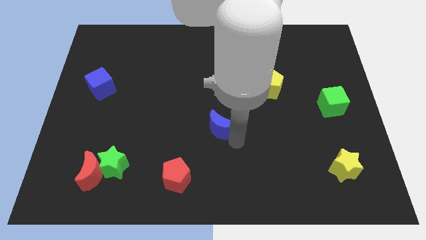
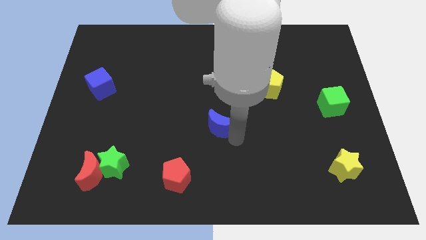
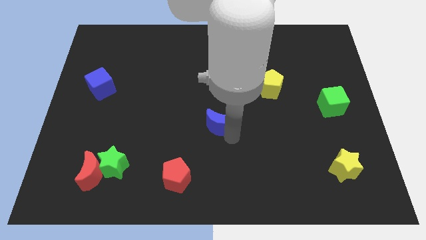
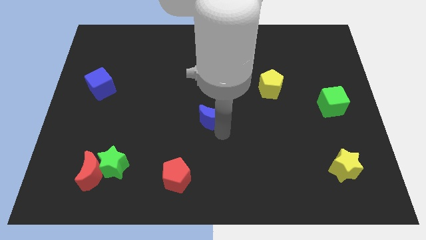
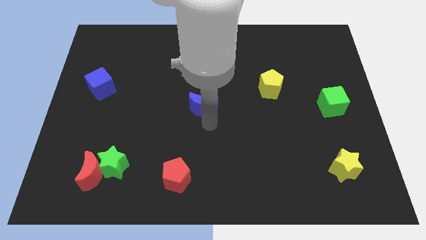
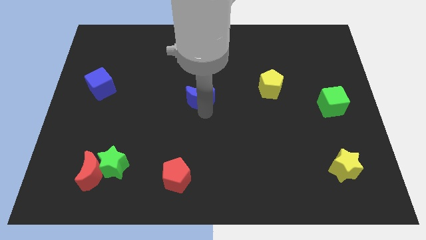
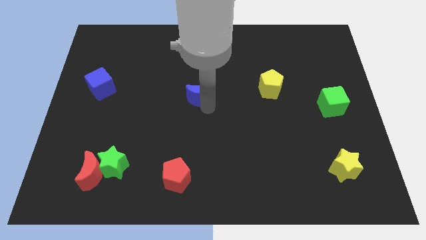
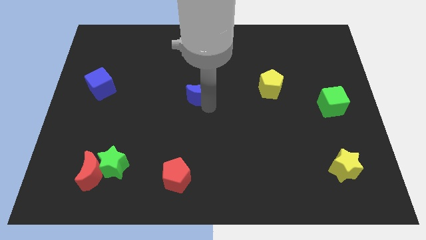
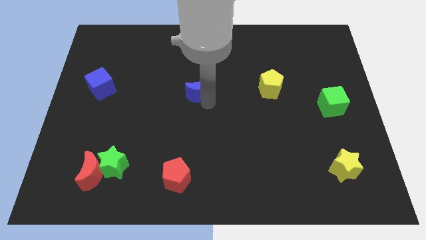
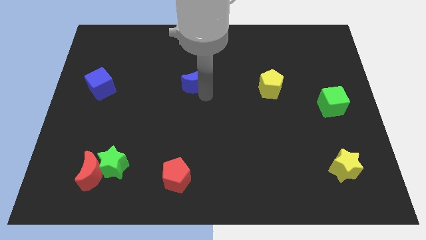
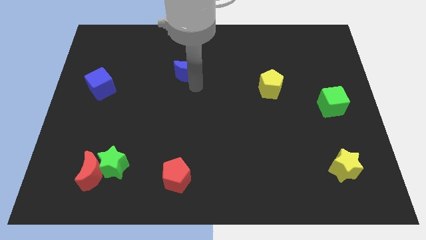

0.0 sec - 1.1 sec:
push the blue block to the right side of the blue cube

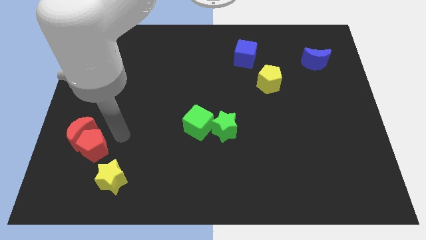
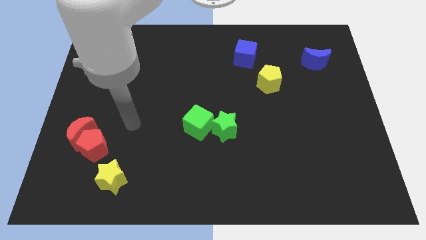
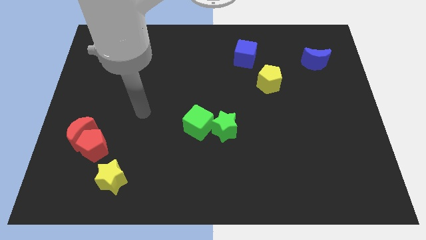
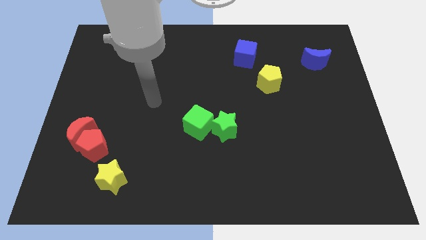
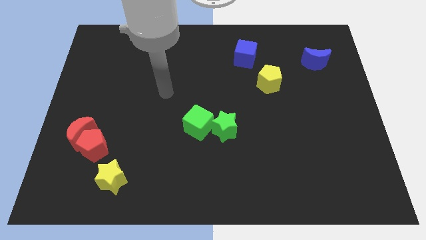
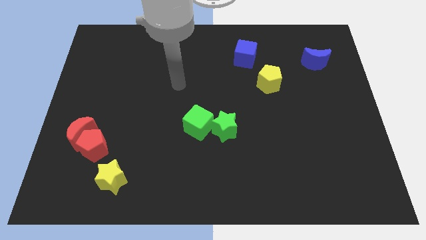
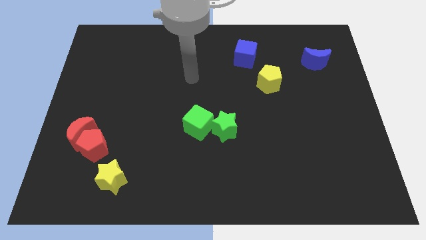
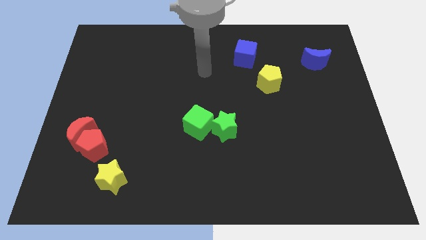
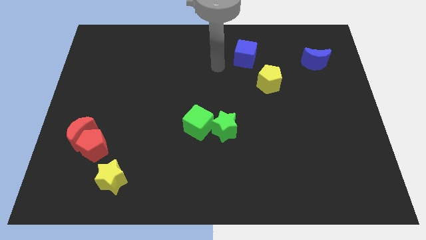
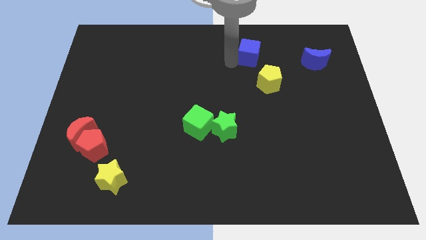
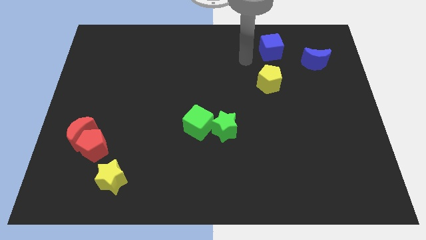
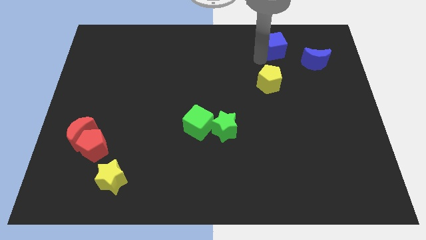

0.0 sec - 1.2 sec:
tap the blue cube

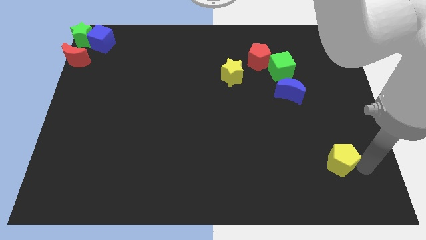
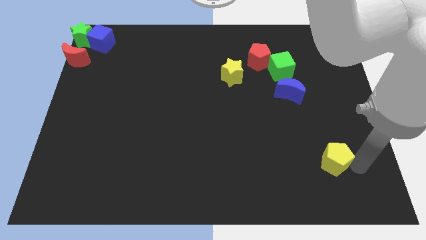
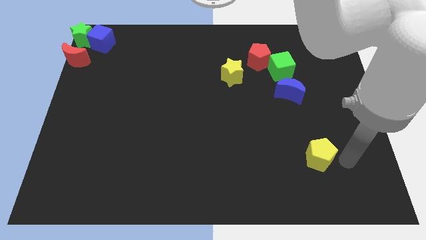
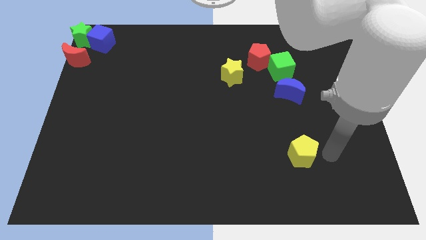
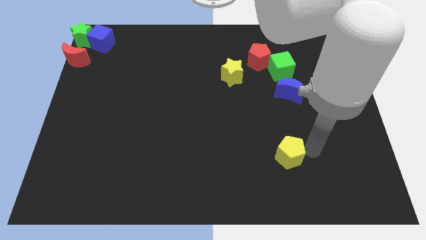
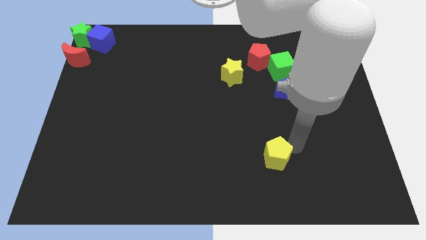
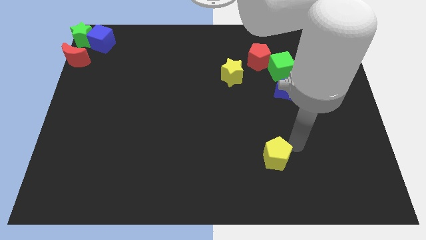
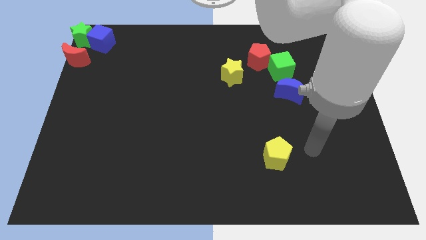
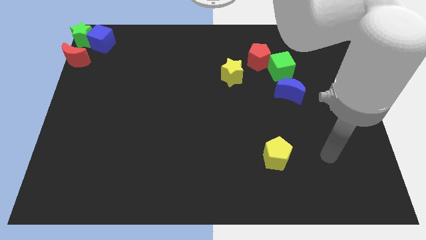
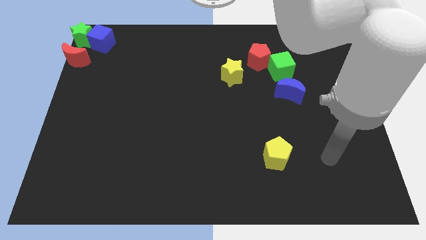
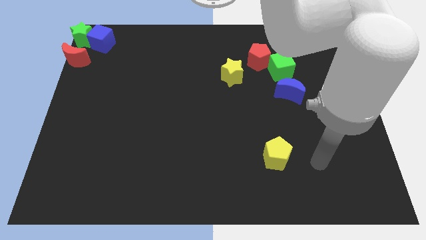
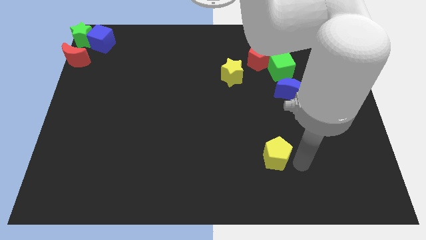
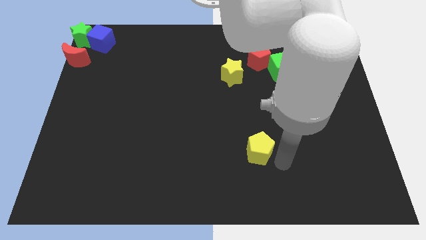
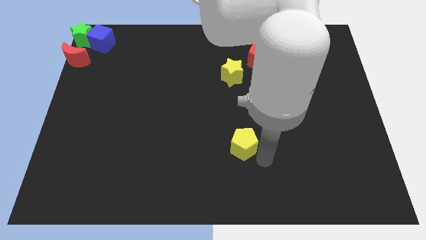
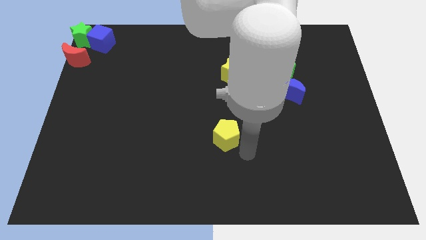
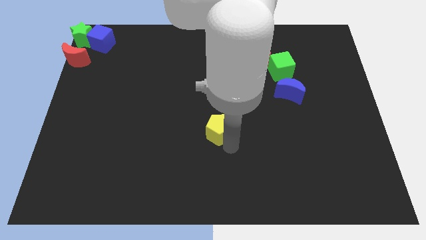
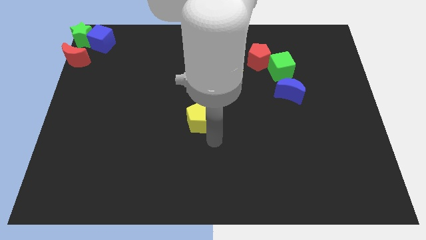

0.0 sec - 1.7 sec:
move the yellow pentagon to the center of the board

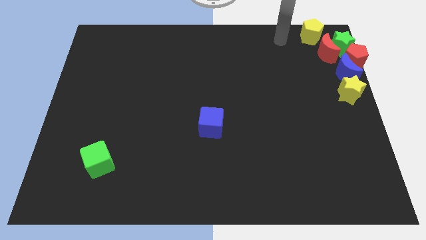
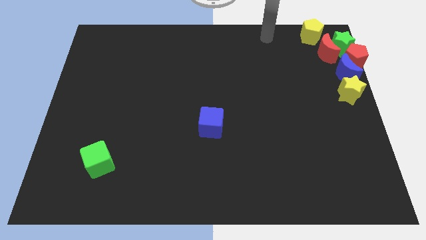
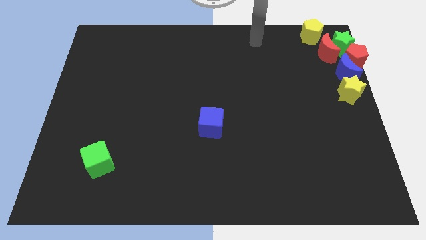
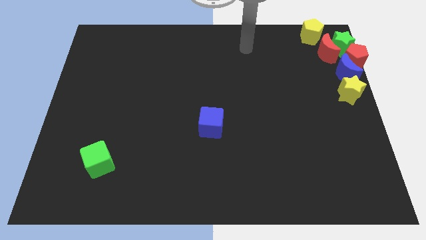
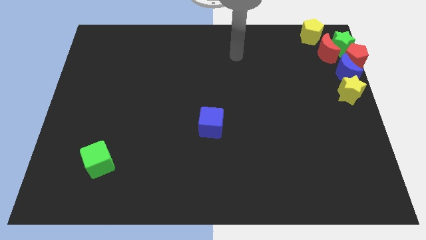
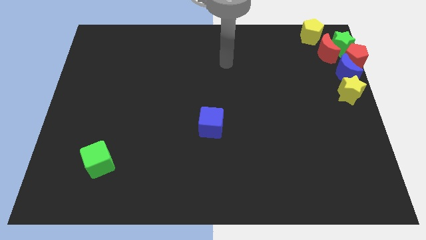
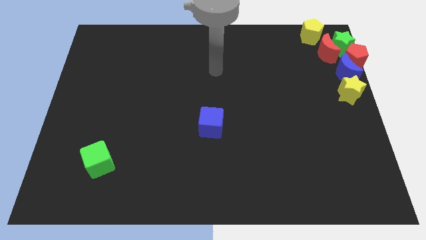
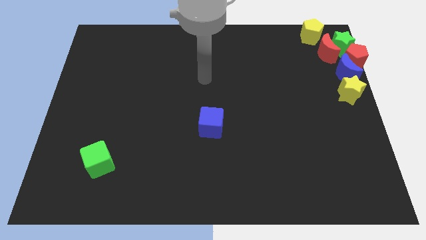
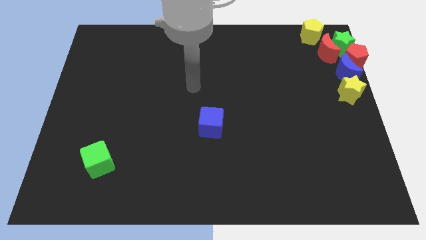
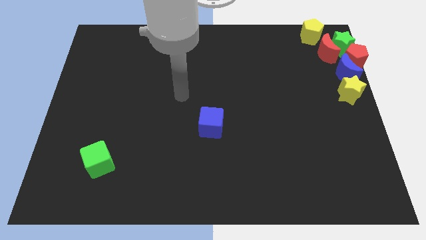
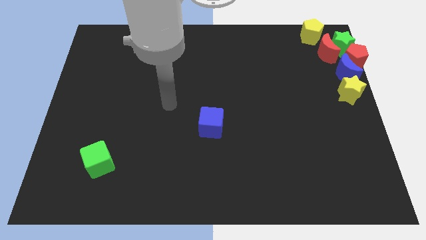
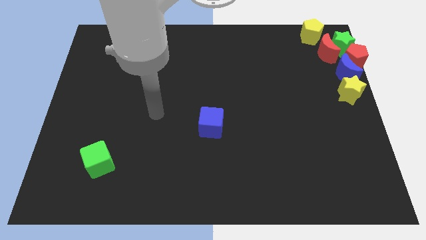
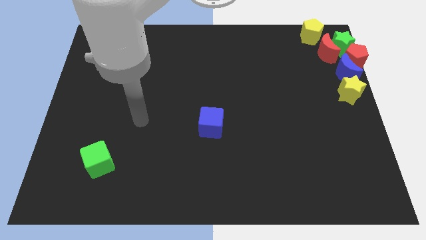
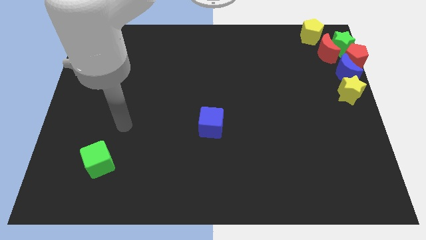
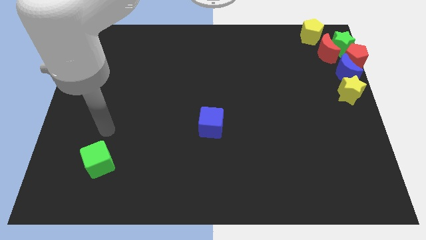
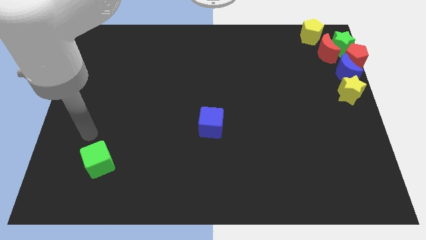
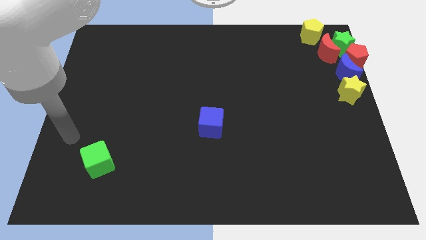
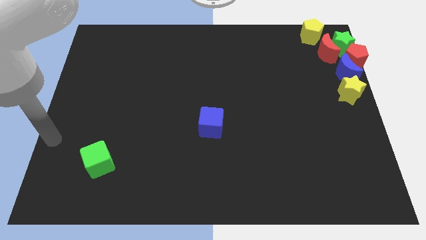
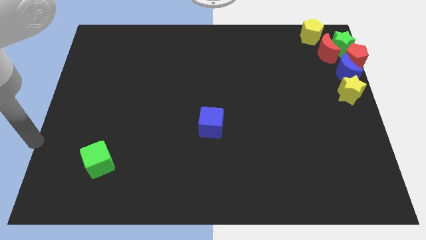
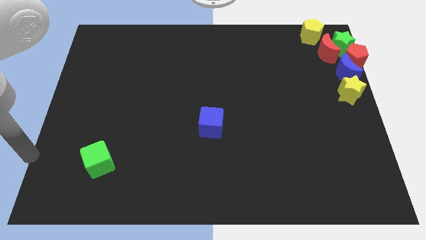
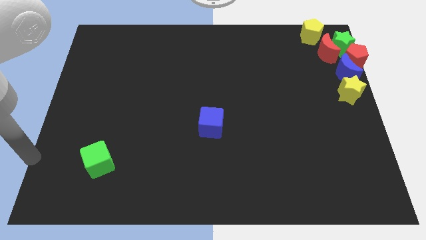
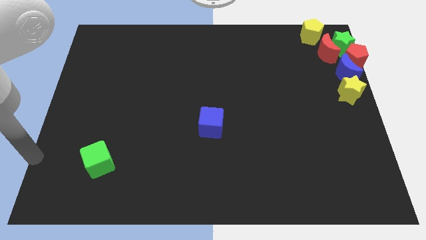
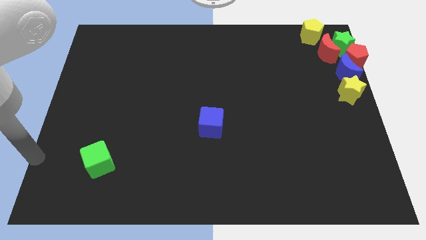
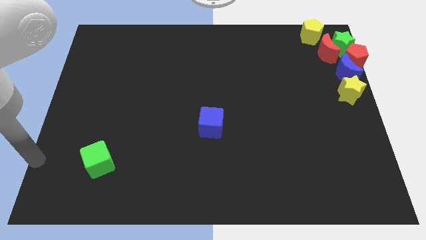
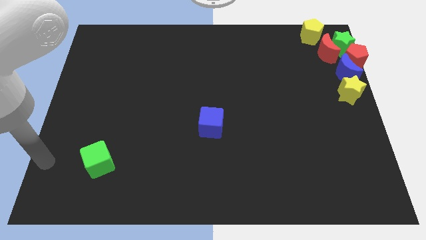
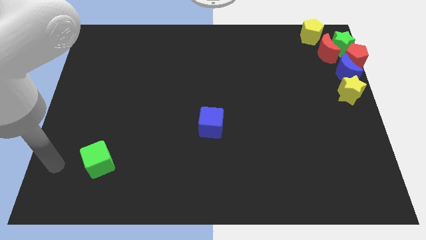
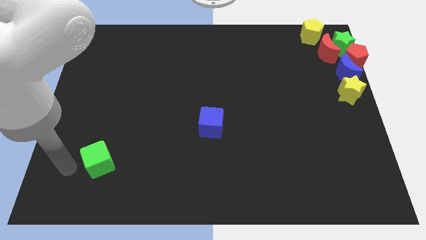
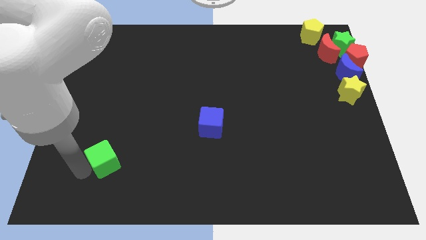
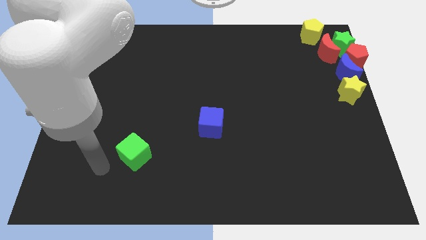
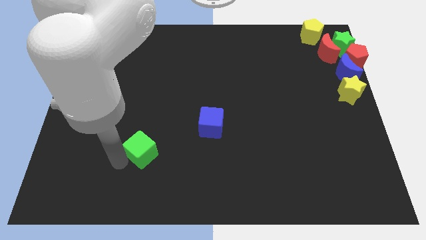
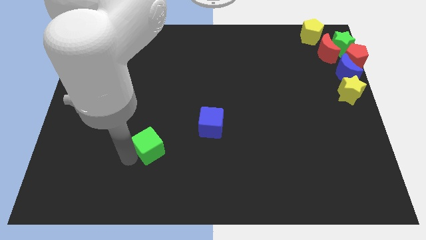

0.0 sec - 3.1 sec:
slide the green cube diagonally to the blue cube

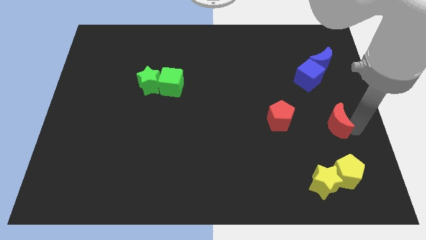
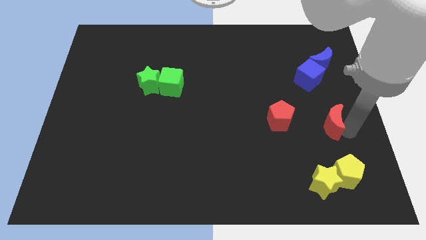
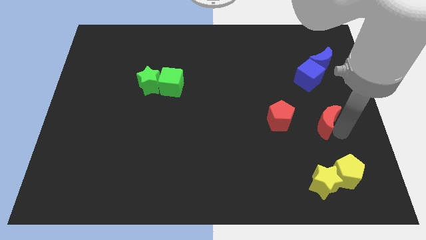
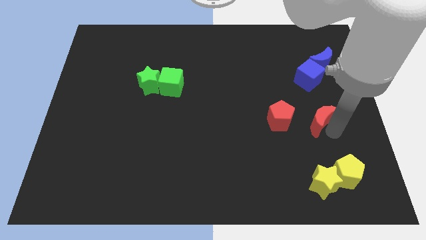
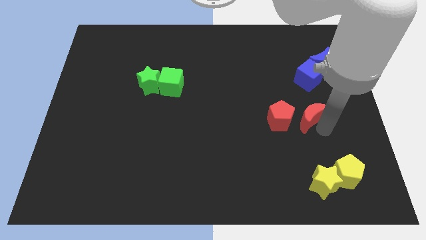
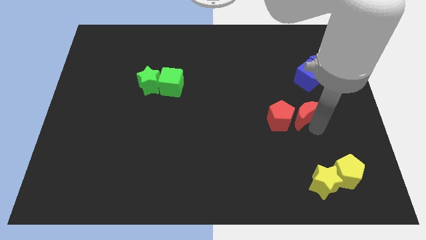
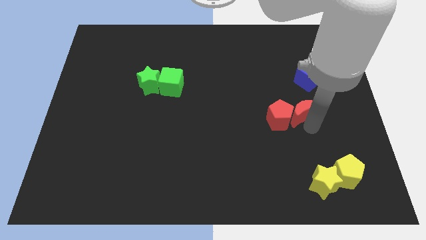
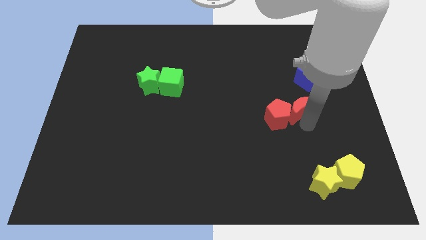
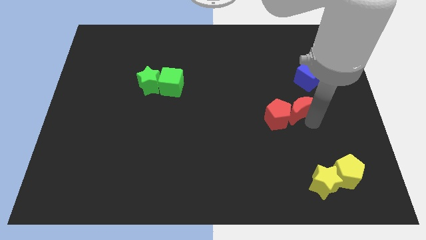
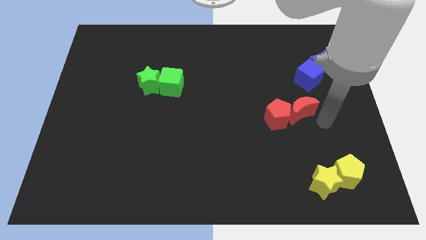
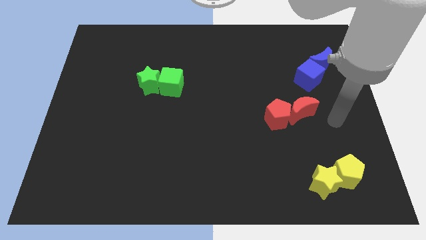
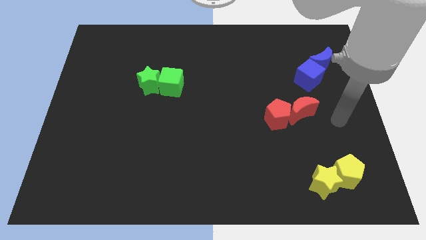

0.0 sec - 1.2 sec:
move the red crescent into the red pentagon

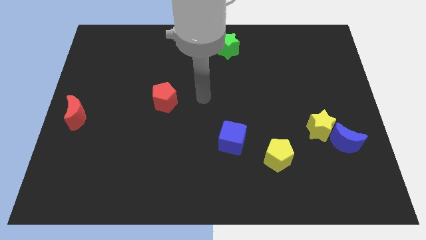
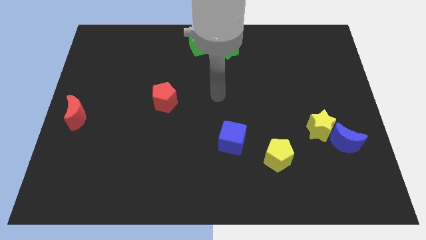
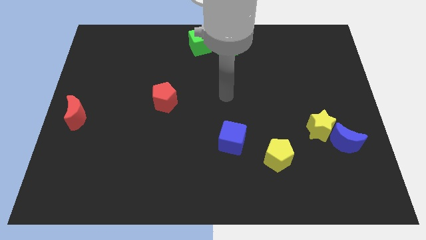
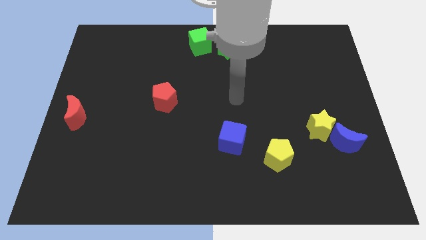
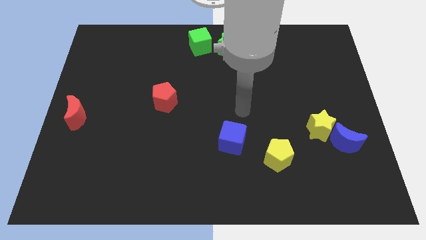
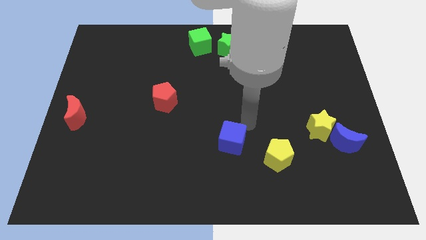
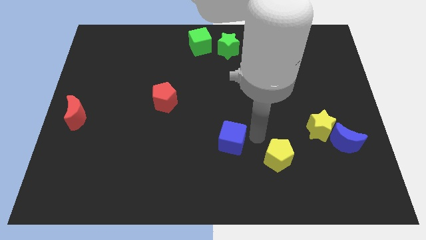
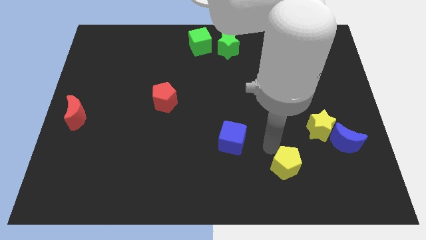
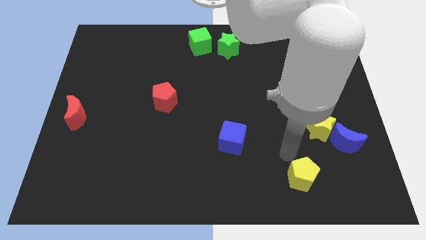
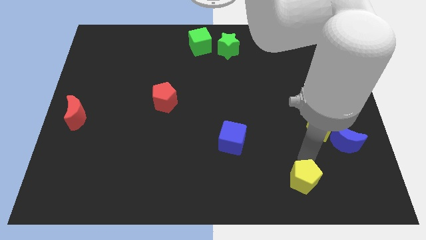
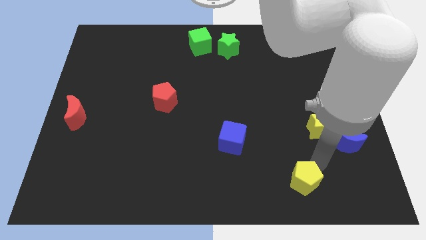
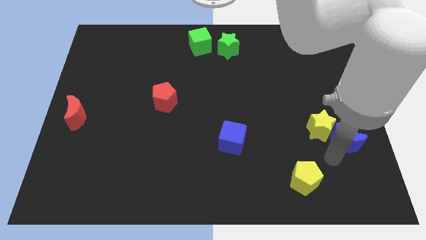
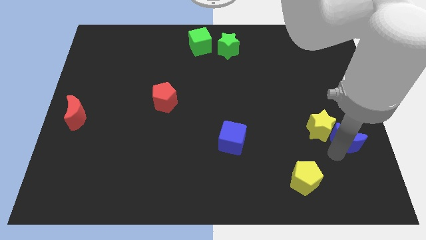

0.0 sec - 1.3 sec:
slightly push the yellow pentagon towards the bottom right
